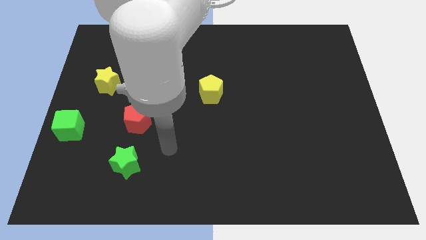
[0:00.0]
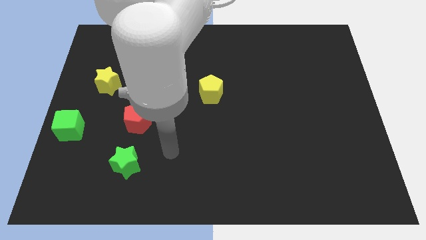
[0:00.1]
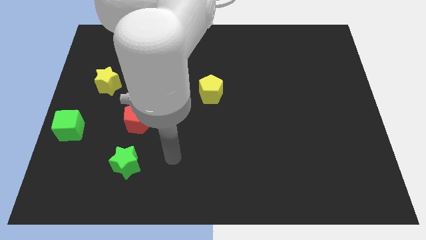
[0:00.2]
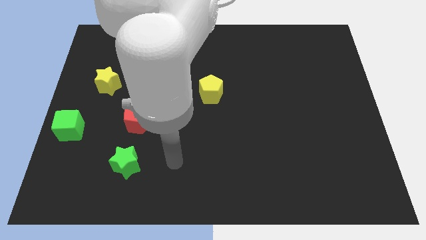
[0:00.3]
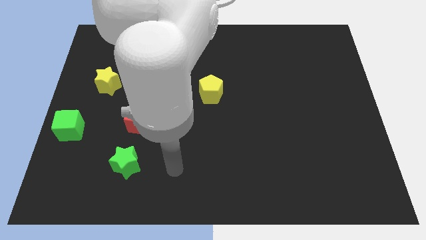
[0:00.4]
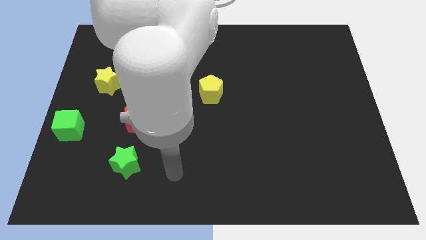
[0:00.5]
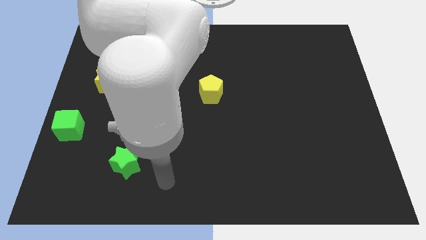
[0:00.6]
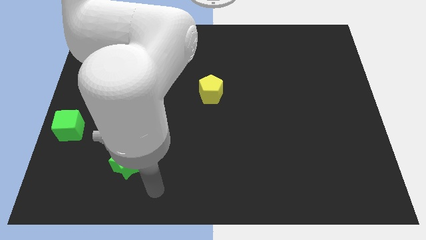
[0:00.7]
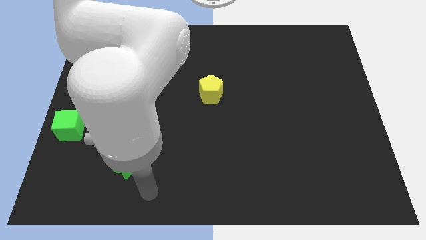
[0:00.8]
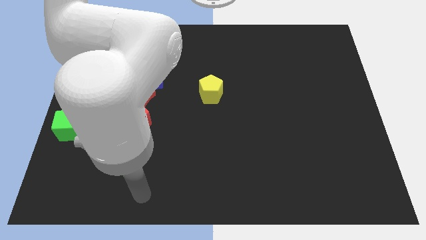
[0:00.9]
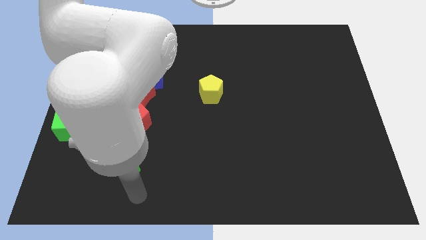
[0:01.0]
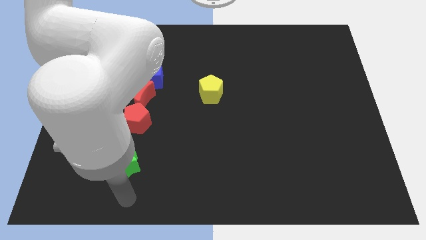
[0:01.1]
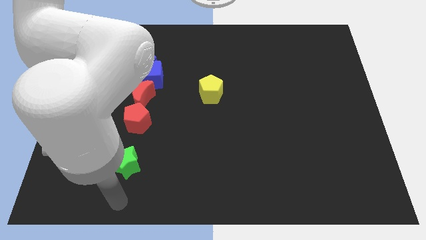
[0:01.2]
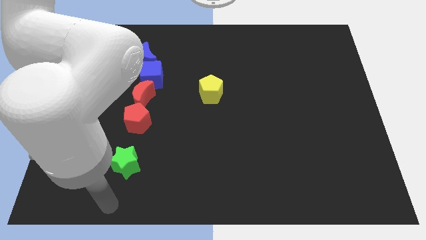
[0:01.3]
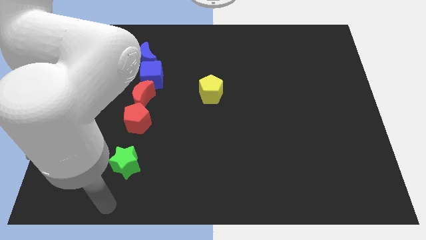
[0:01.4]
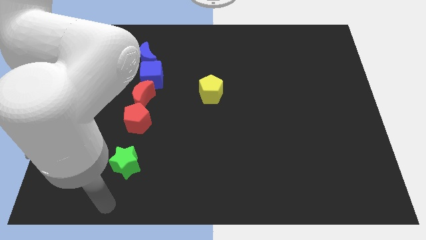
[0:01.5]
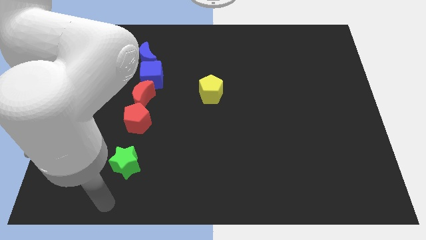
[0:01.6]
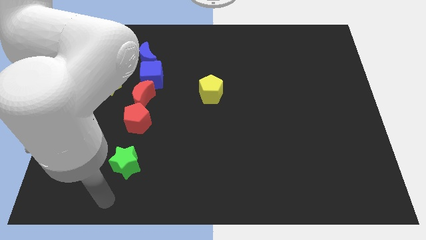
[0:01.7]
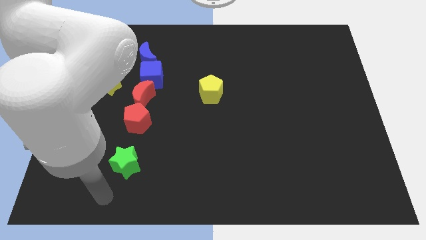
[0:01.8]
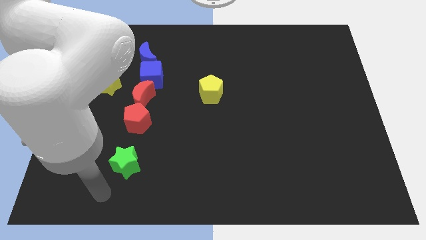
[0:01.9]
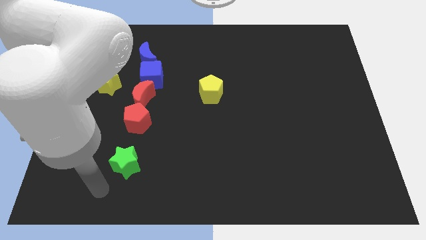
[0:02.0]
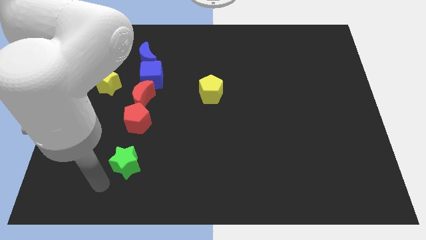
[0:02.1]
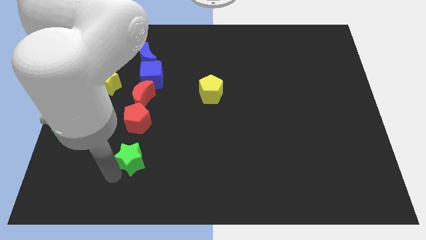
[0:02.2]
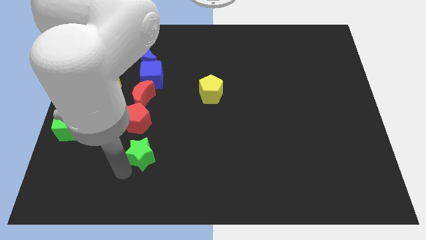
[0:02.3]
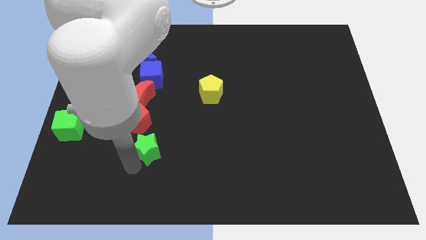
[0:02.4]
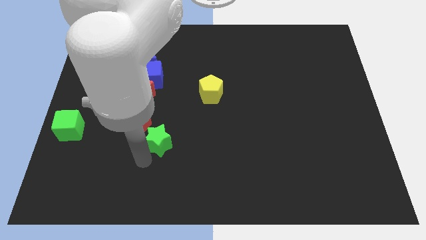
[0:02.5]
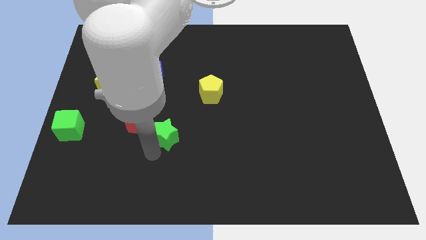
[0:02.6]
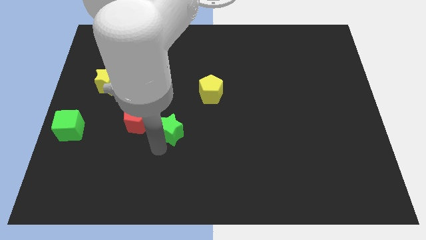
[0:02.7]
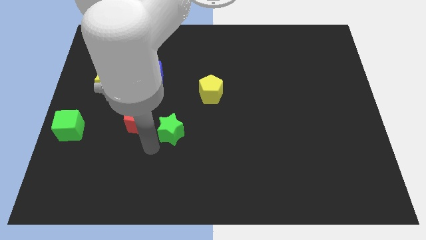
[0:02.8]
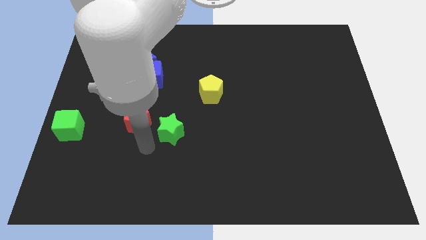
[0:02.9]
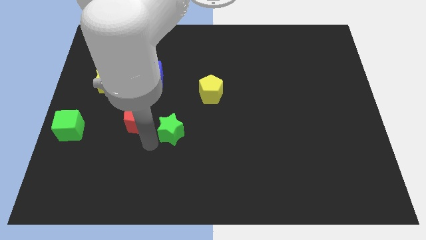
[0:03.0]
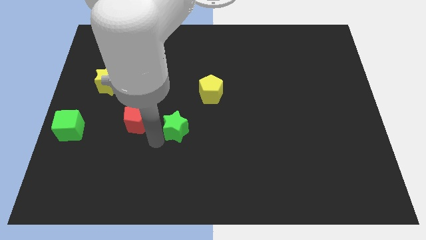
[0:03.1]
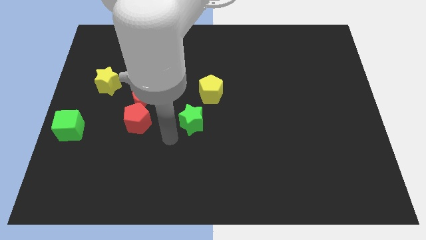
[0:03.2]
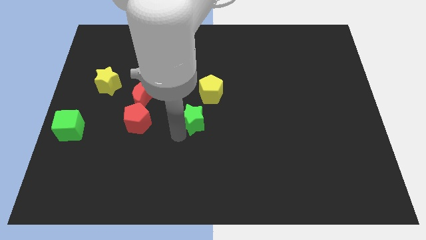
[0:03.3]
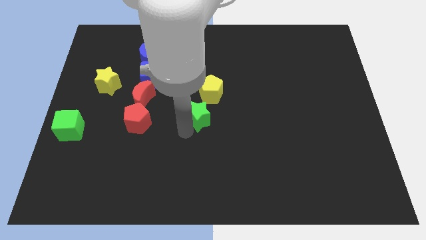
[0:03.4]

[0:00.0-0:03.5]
place the green cube to the right of the red pentagon

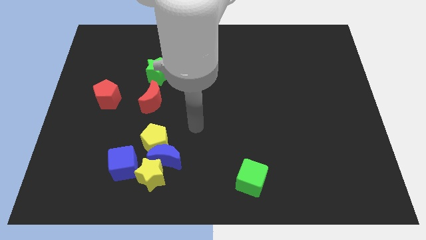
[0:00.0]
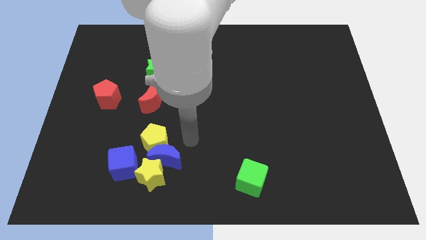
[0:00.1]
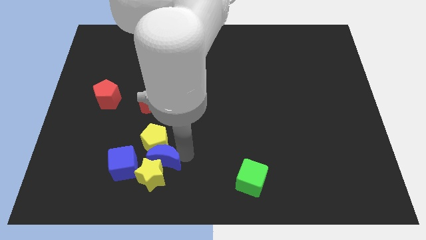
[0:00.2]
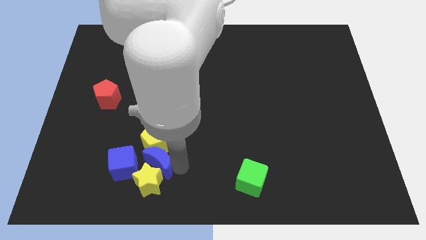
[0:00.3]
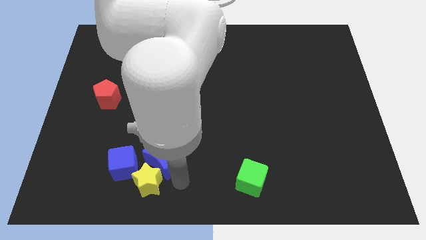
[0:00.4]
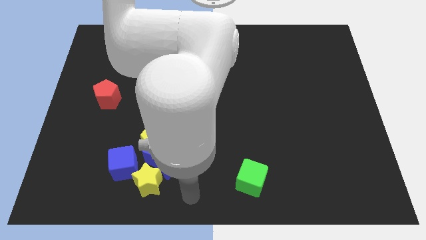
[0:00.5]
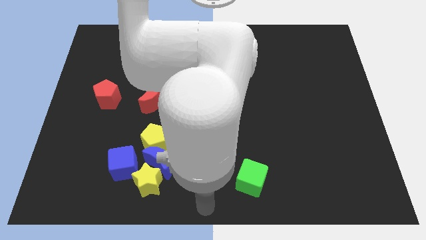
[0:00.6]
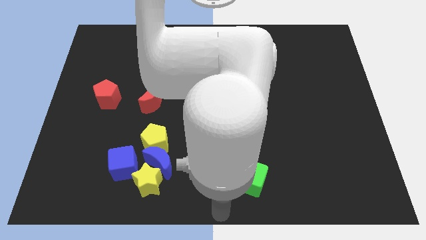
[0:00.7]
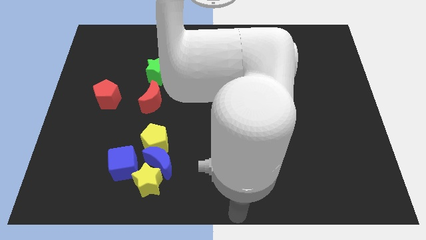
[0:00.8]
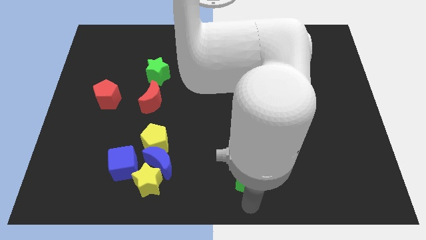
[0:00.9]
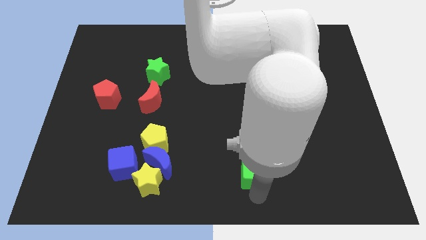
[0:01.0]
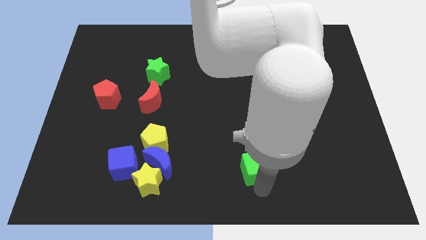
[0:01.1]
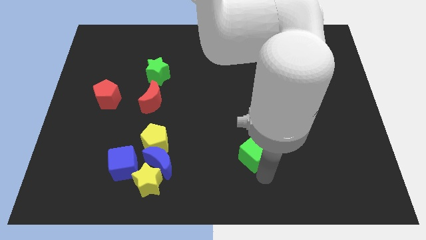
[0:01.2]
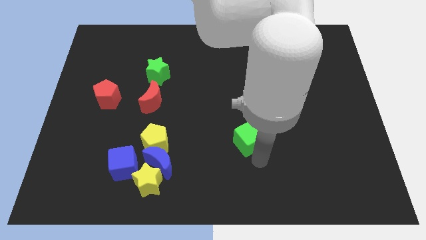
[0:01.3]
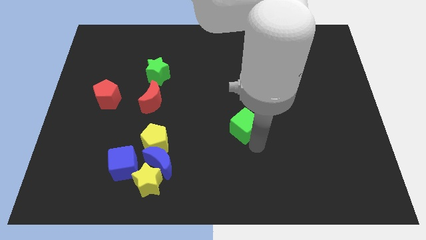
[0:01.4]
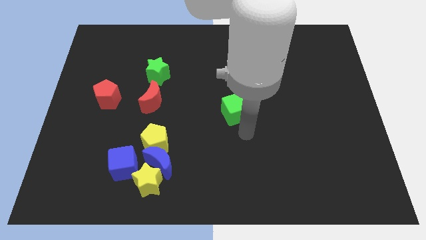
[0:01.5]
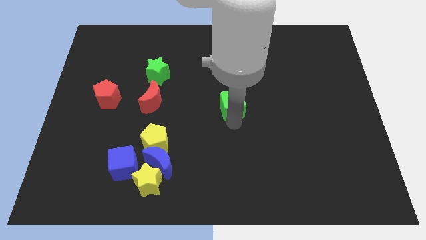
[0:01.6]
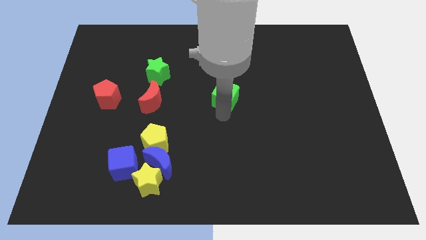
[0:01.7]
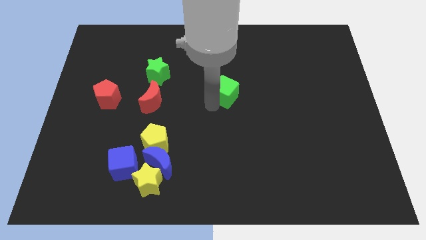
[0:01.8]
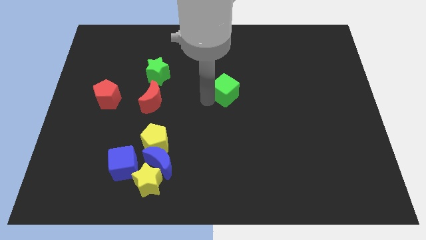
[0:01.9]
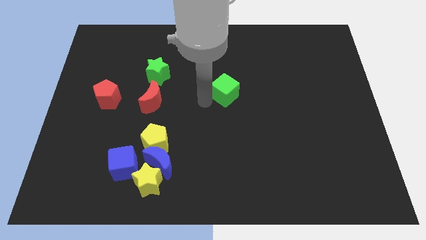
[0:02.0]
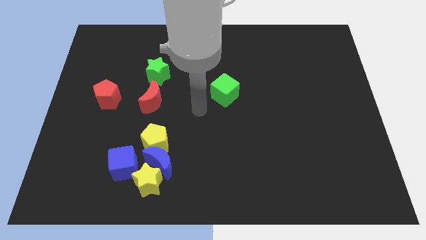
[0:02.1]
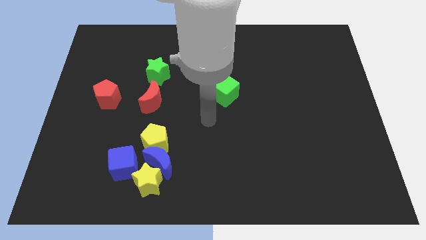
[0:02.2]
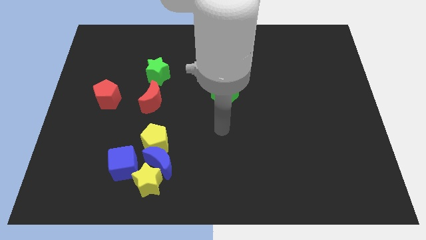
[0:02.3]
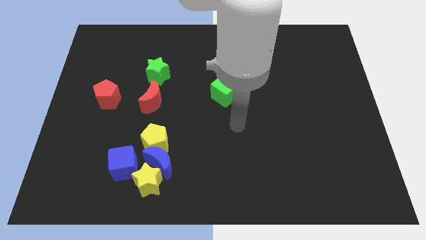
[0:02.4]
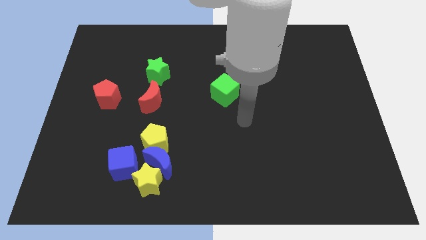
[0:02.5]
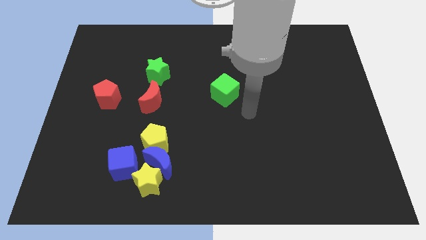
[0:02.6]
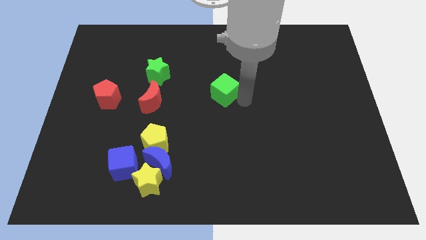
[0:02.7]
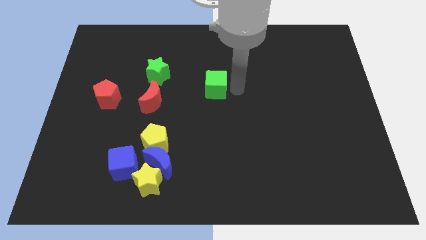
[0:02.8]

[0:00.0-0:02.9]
place the green cube to the right of the green star and red crescent

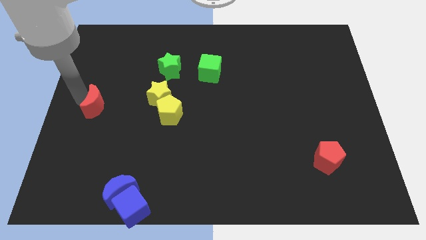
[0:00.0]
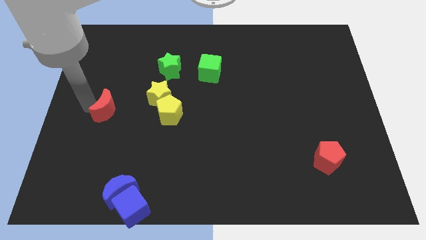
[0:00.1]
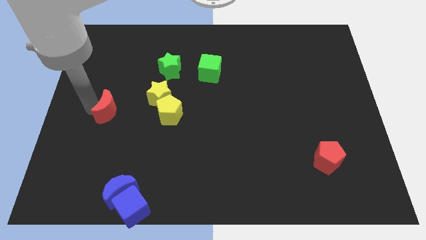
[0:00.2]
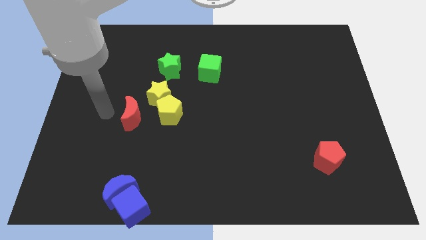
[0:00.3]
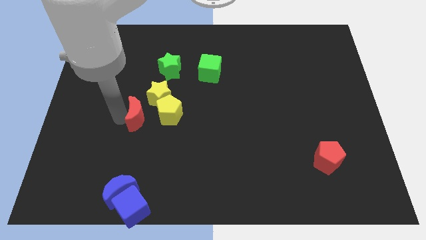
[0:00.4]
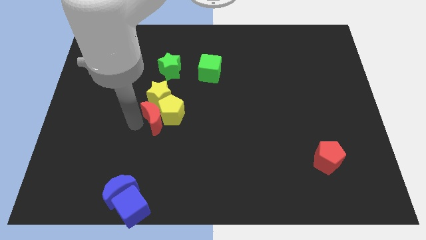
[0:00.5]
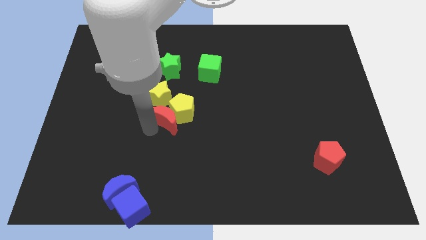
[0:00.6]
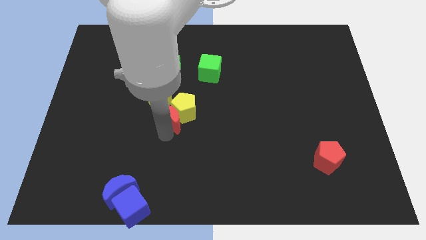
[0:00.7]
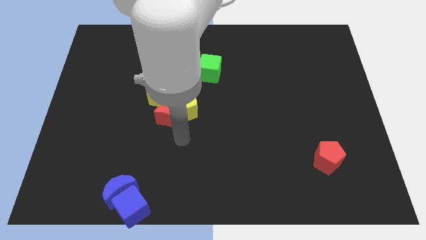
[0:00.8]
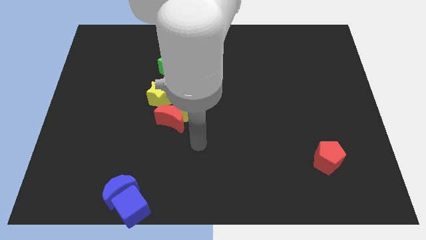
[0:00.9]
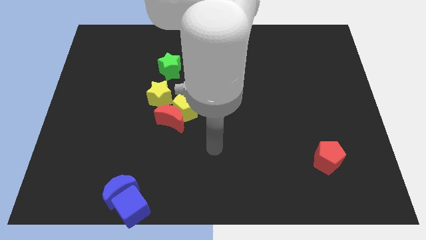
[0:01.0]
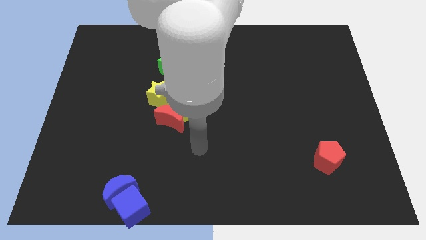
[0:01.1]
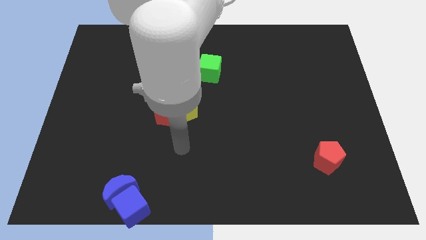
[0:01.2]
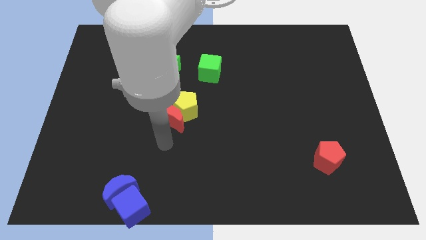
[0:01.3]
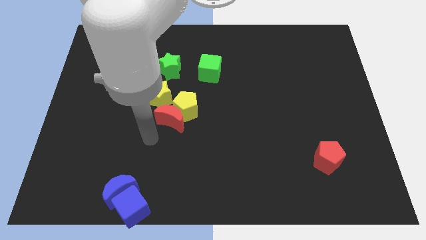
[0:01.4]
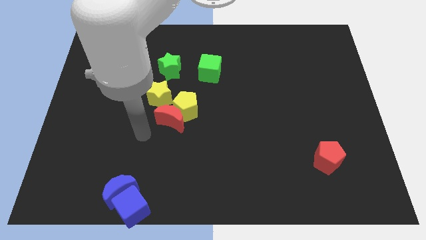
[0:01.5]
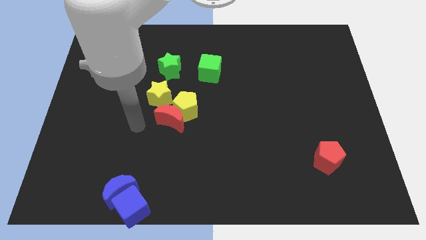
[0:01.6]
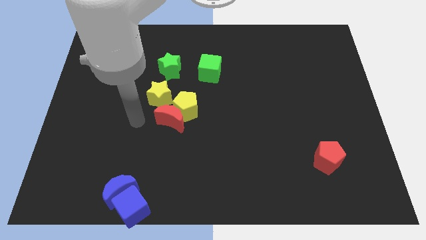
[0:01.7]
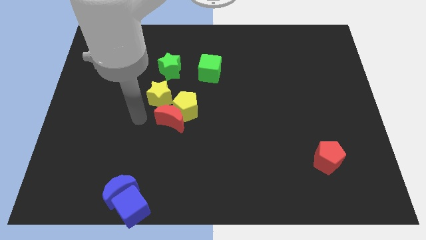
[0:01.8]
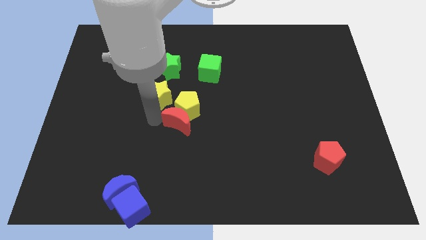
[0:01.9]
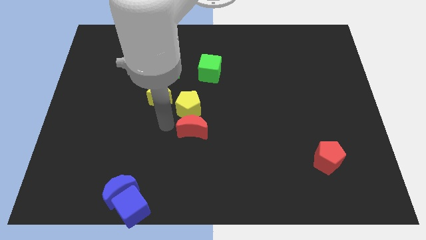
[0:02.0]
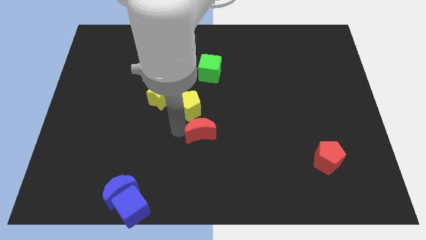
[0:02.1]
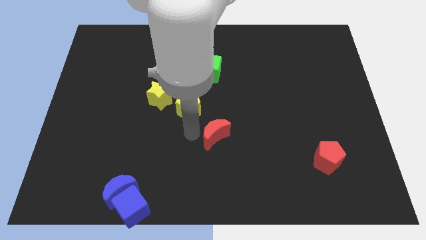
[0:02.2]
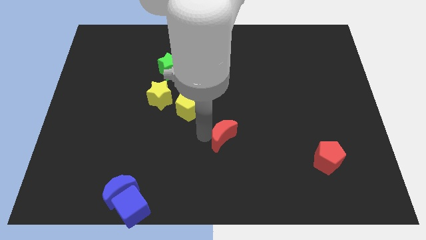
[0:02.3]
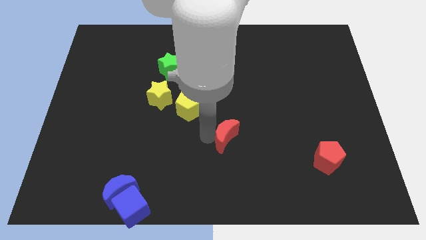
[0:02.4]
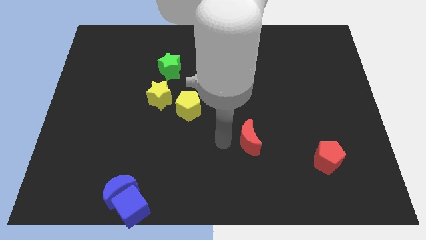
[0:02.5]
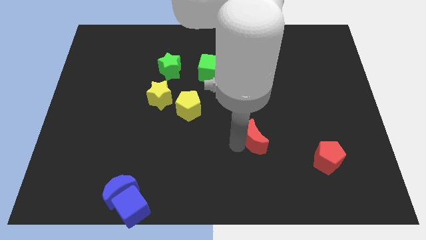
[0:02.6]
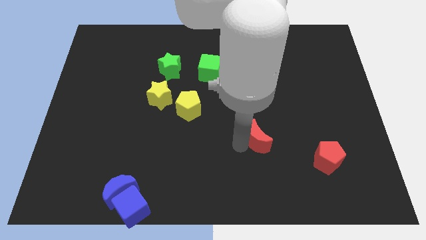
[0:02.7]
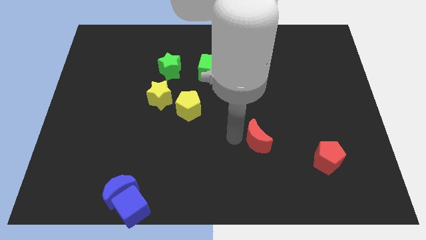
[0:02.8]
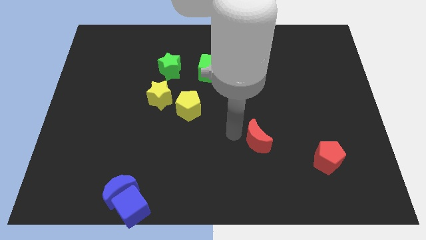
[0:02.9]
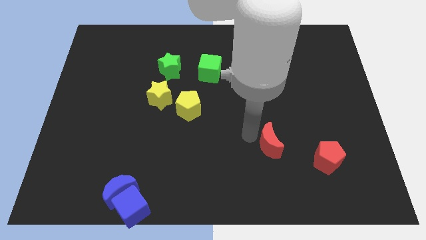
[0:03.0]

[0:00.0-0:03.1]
place the red moon diagonally in between the red pentagon and yellow pentagon
